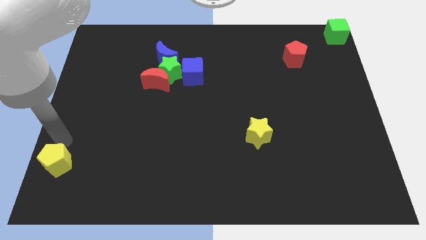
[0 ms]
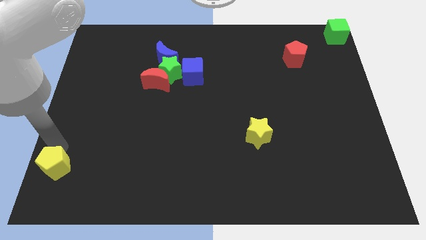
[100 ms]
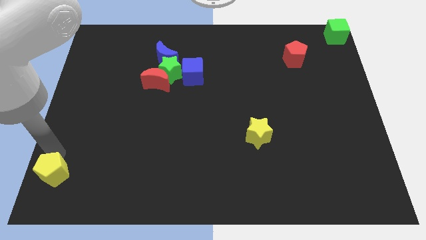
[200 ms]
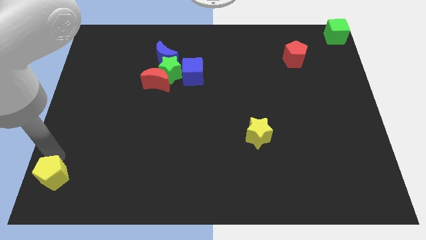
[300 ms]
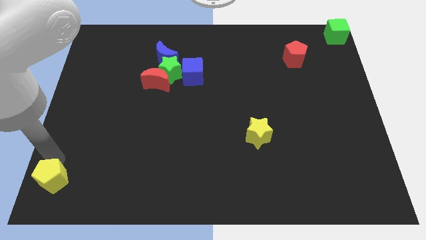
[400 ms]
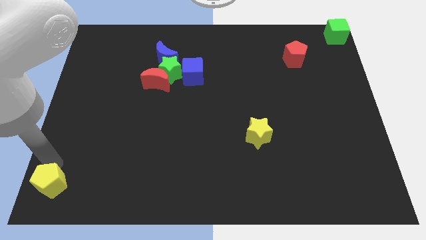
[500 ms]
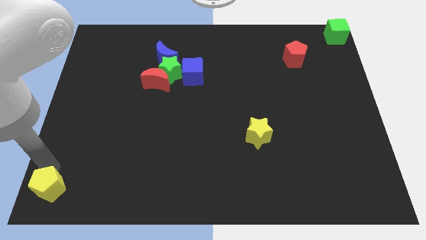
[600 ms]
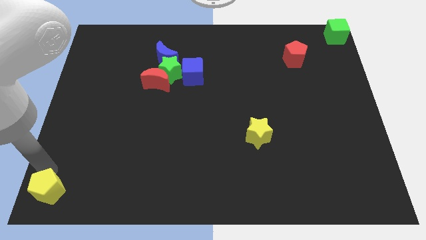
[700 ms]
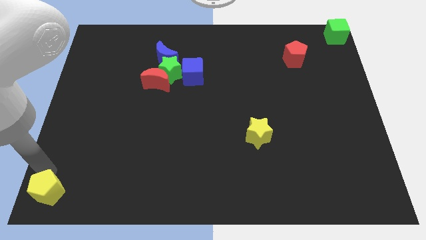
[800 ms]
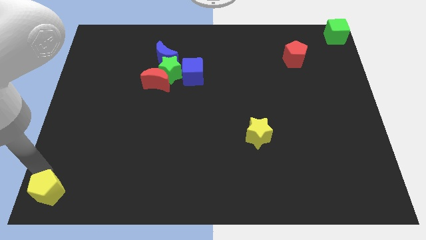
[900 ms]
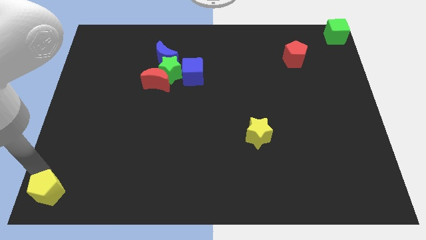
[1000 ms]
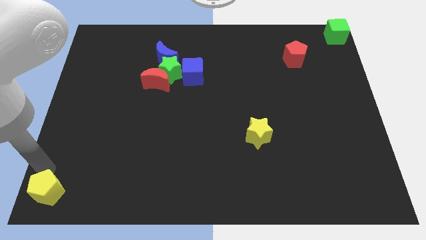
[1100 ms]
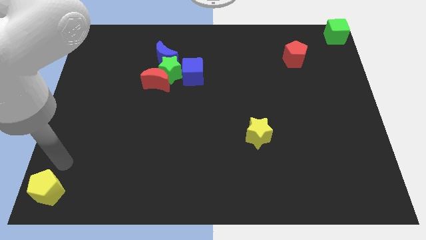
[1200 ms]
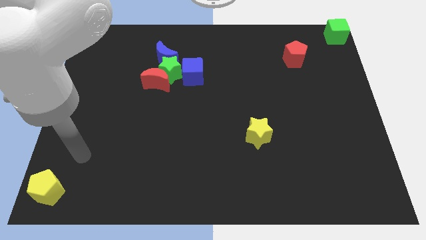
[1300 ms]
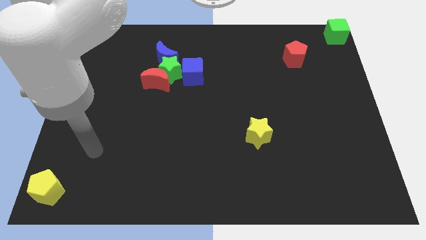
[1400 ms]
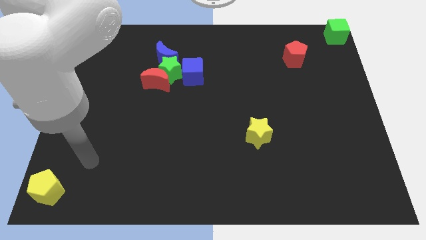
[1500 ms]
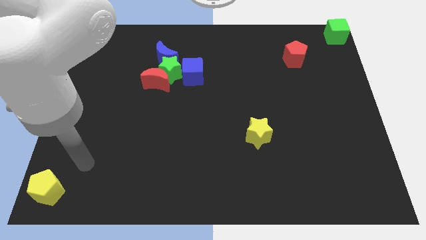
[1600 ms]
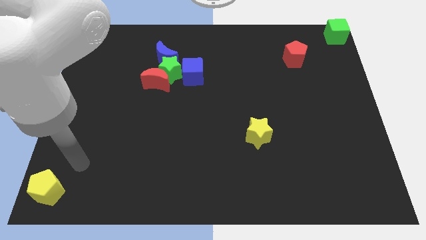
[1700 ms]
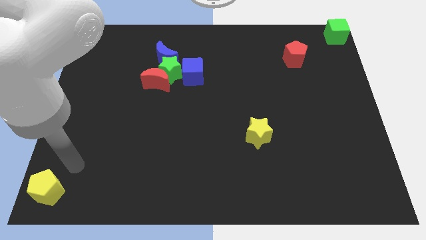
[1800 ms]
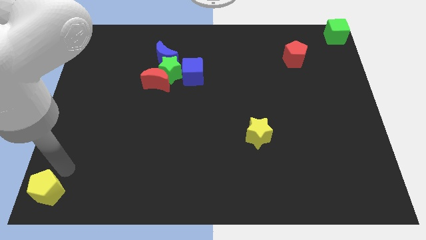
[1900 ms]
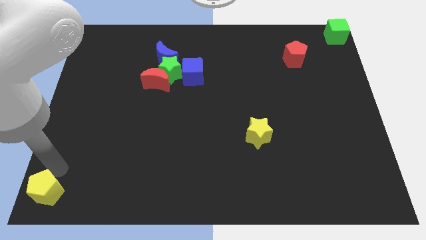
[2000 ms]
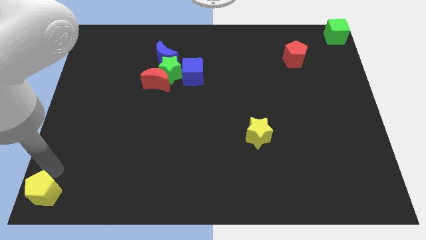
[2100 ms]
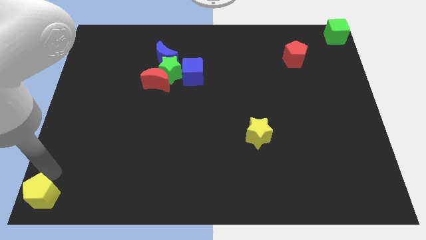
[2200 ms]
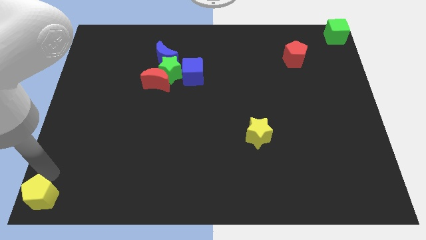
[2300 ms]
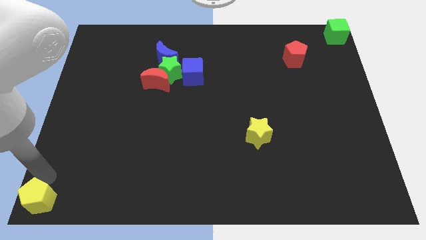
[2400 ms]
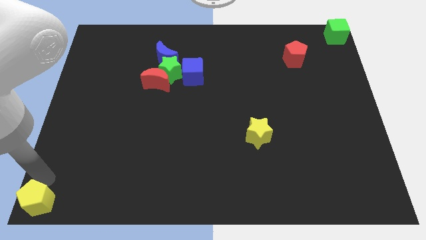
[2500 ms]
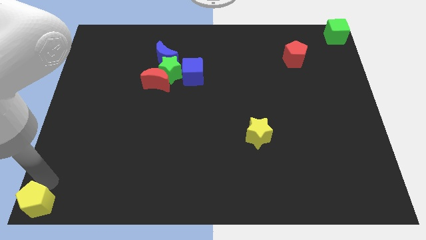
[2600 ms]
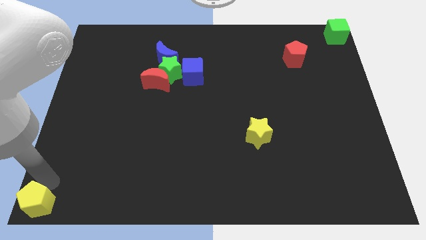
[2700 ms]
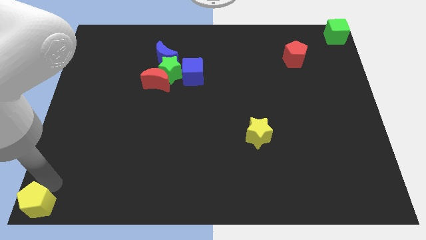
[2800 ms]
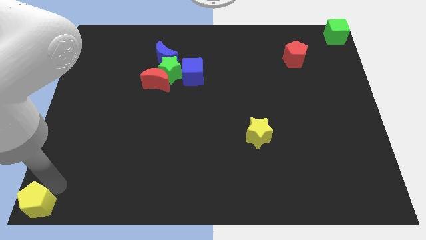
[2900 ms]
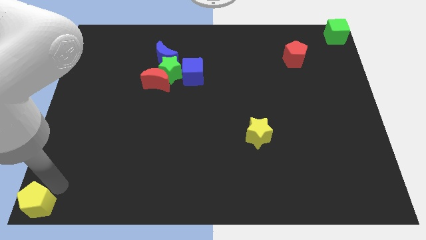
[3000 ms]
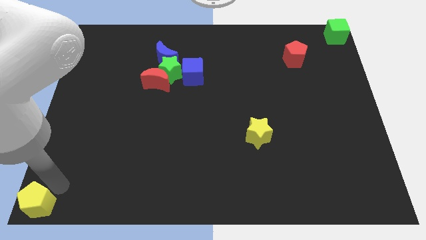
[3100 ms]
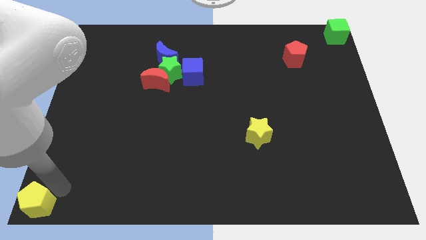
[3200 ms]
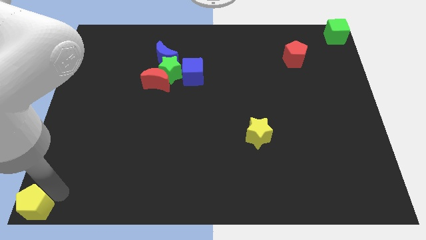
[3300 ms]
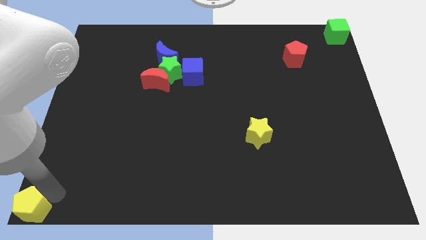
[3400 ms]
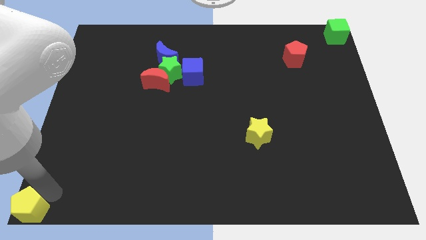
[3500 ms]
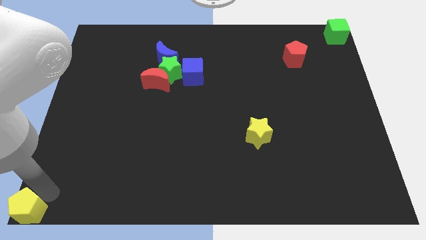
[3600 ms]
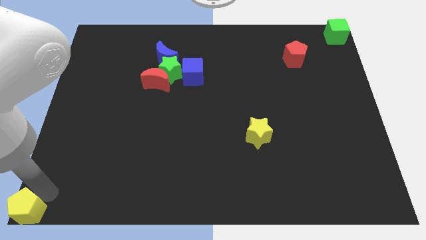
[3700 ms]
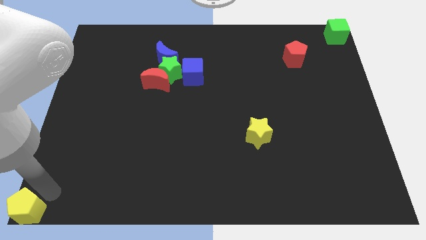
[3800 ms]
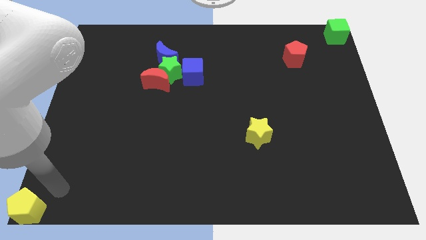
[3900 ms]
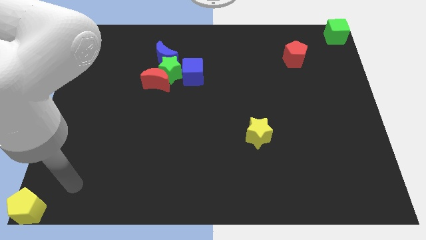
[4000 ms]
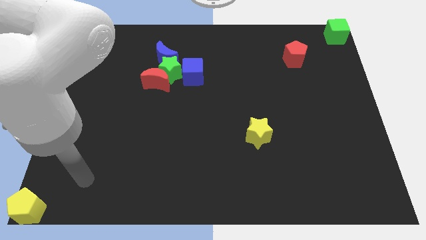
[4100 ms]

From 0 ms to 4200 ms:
put the yellow pentagon at the bottom left corner of the board

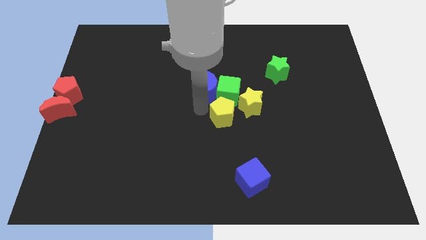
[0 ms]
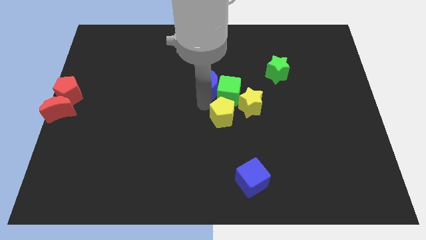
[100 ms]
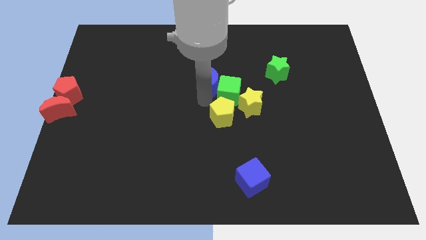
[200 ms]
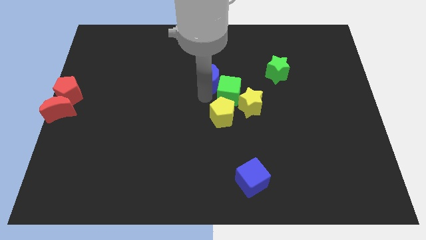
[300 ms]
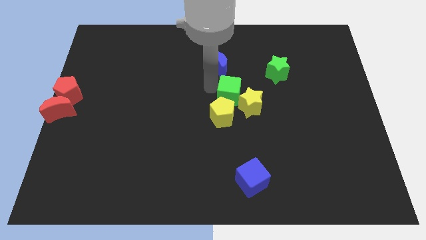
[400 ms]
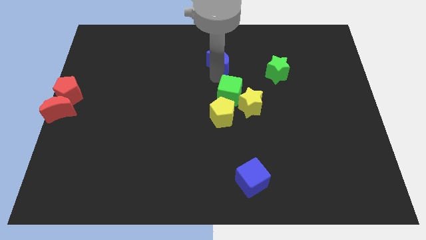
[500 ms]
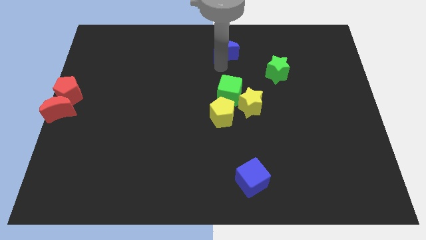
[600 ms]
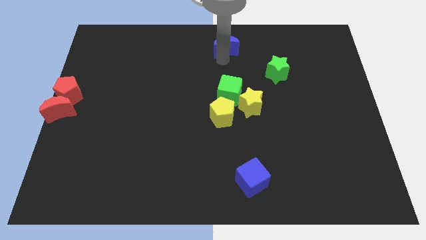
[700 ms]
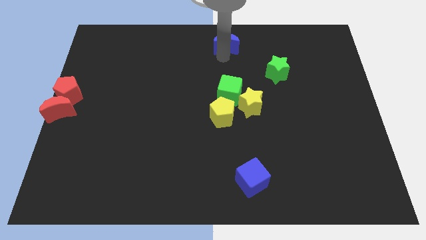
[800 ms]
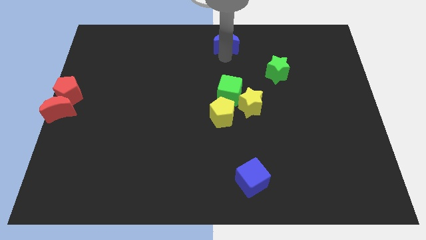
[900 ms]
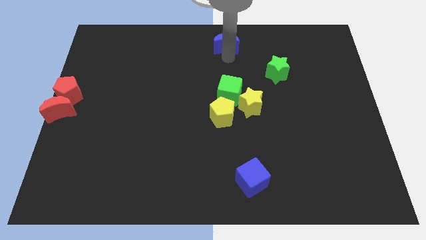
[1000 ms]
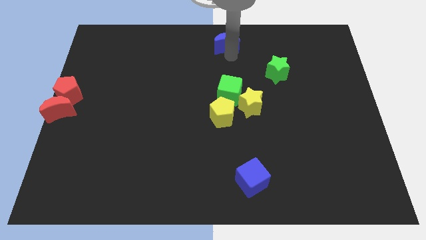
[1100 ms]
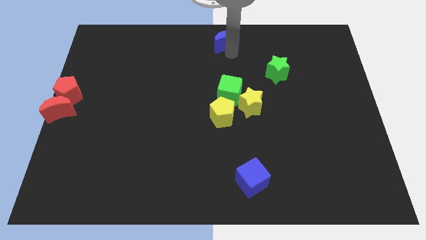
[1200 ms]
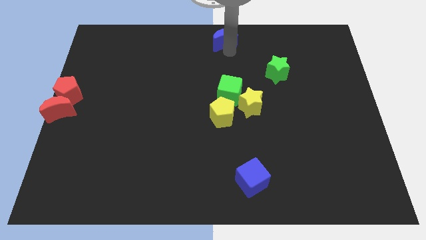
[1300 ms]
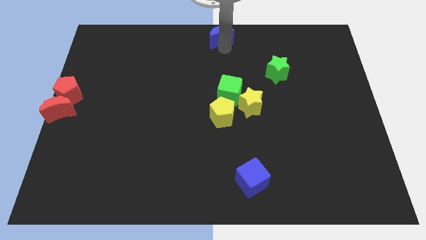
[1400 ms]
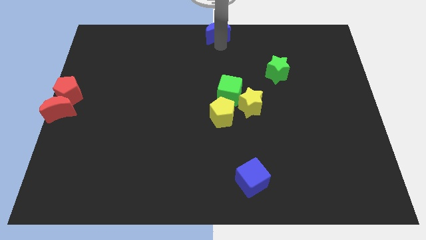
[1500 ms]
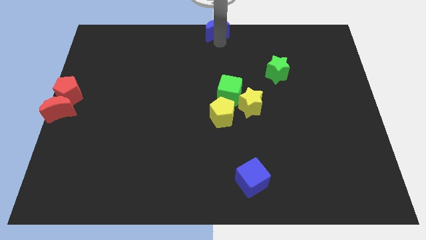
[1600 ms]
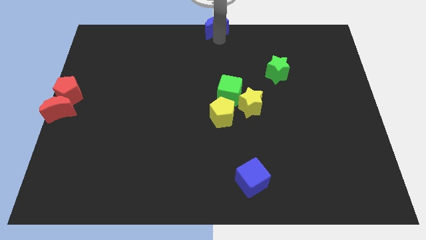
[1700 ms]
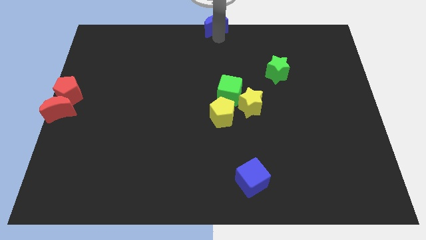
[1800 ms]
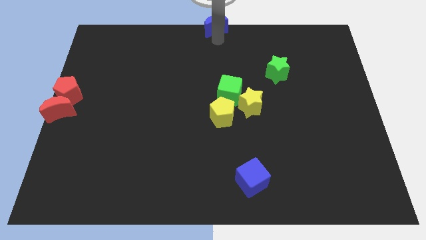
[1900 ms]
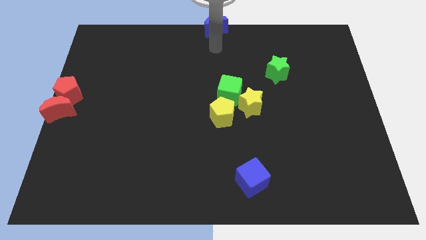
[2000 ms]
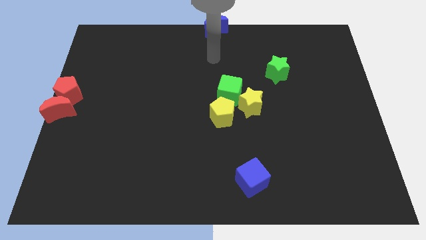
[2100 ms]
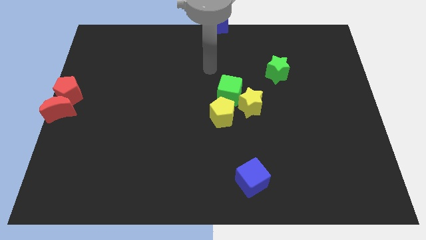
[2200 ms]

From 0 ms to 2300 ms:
move the blue crescent to the top center

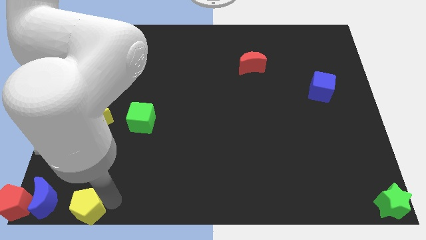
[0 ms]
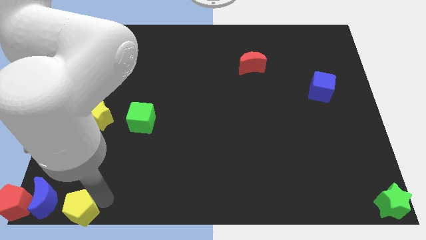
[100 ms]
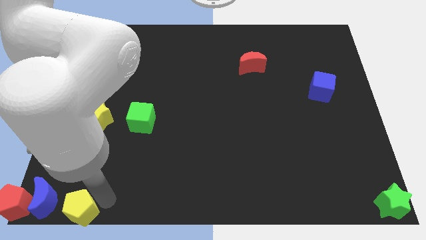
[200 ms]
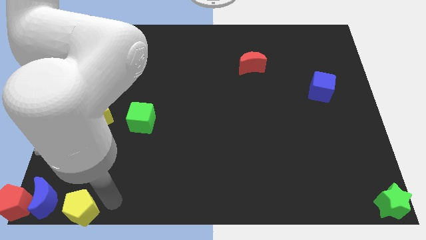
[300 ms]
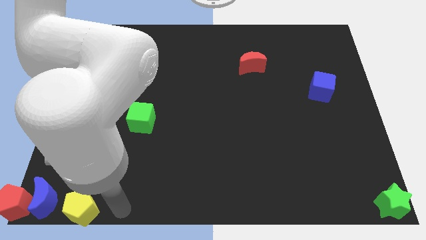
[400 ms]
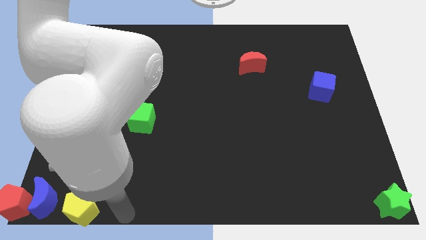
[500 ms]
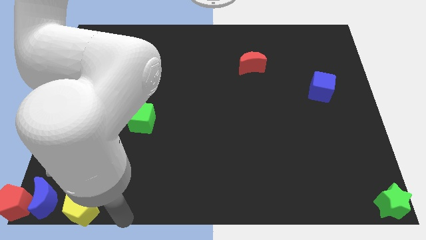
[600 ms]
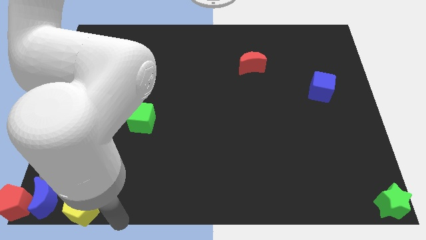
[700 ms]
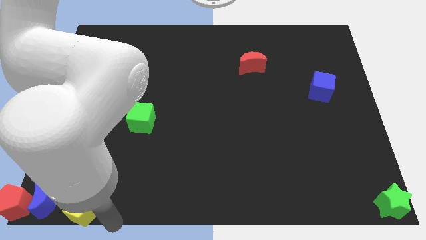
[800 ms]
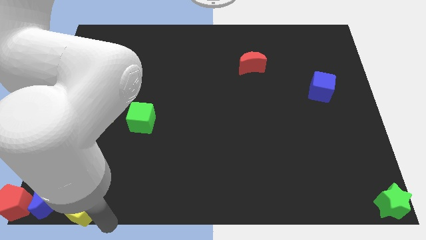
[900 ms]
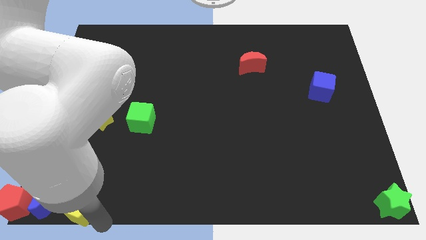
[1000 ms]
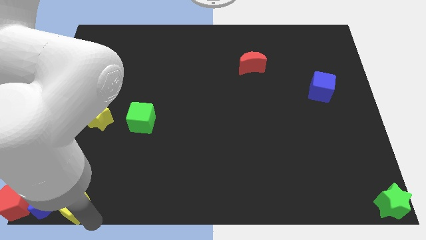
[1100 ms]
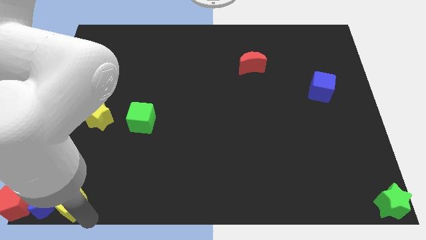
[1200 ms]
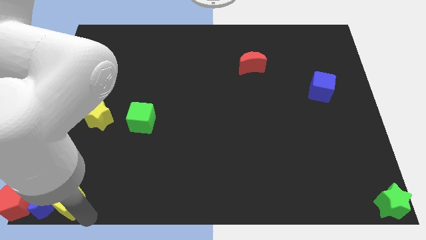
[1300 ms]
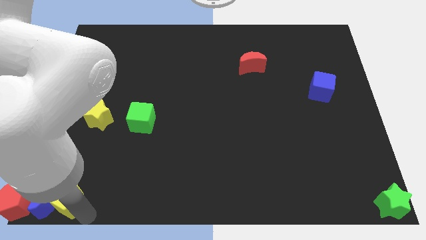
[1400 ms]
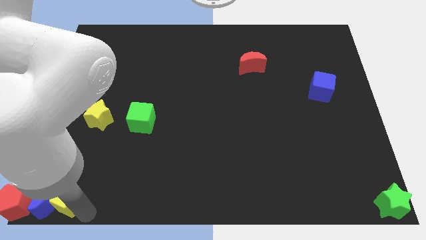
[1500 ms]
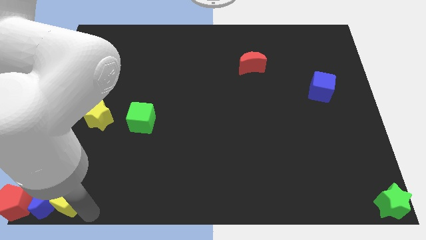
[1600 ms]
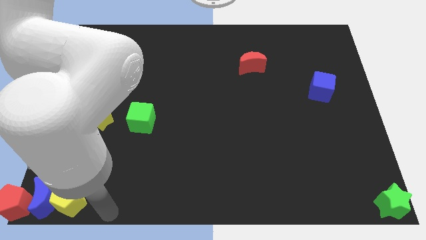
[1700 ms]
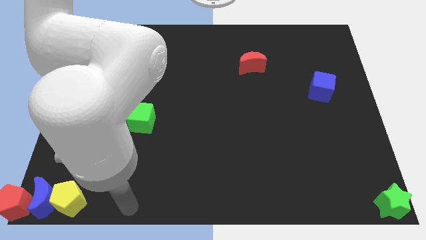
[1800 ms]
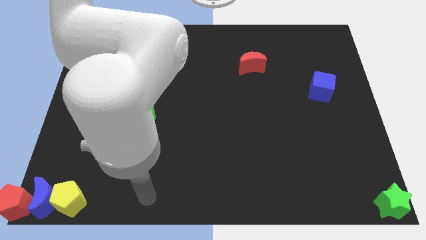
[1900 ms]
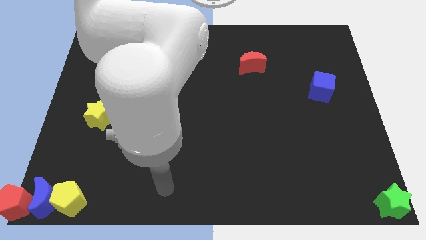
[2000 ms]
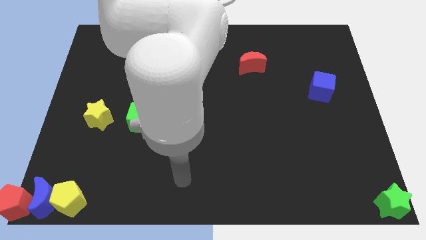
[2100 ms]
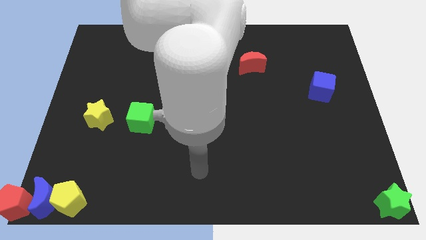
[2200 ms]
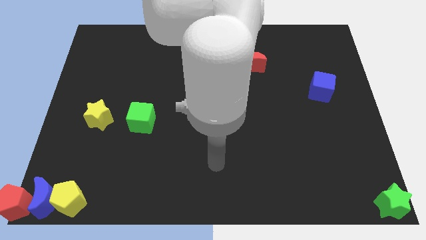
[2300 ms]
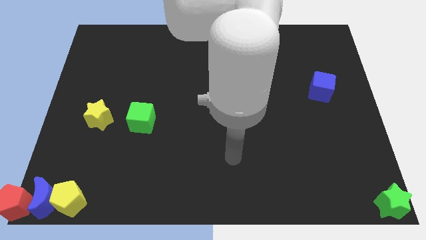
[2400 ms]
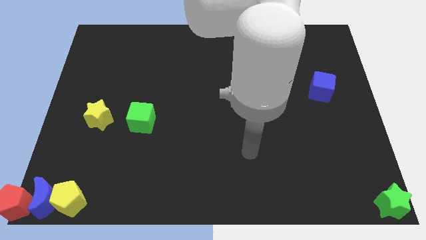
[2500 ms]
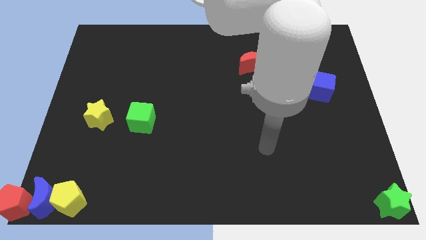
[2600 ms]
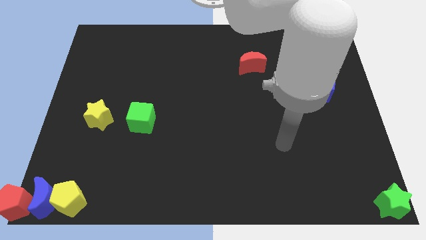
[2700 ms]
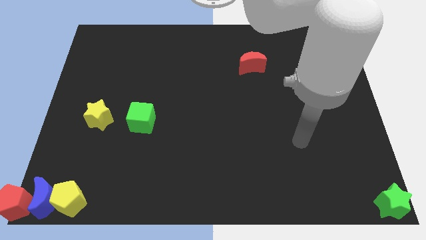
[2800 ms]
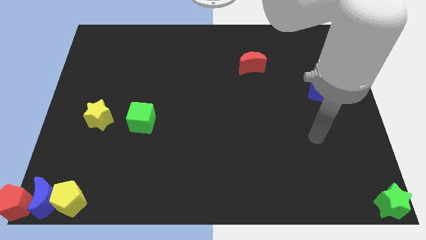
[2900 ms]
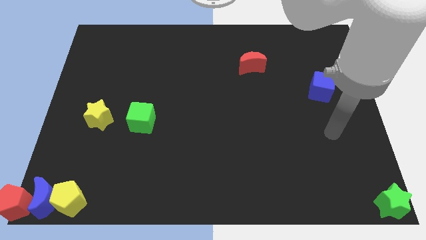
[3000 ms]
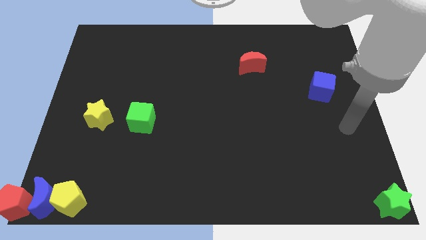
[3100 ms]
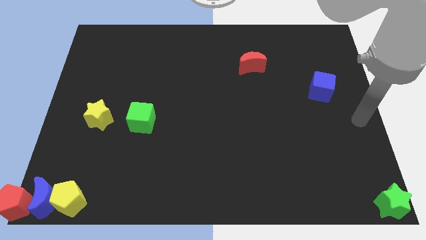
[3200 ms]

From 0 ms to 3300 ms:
move your arm away from the yellow pentagon
